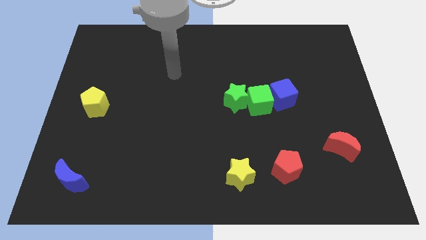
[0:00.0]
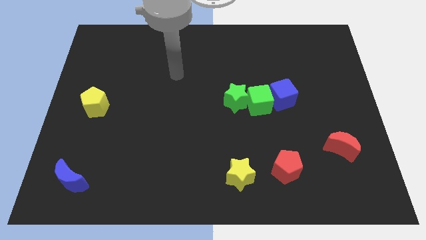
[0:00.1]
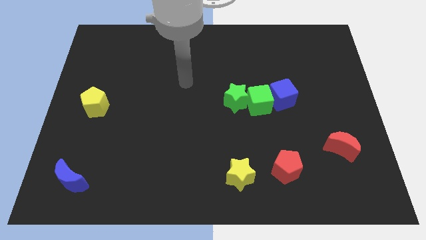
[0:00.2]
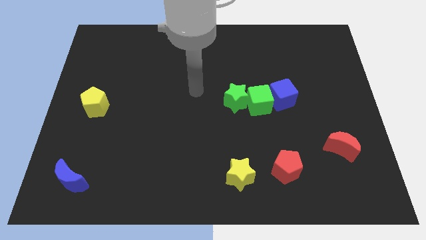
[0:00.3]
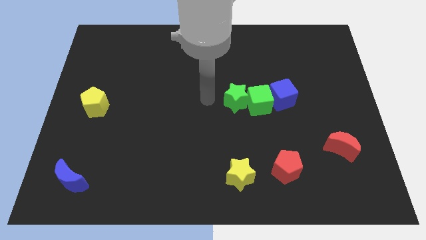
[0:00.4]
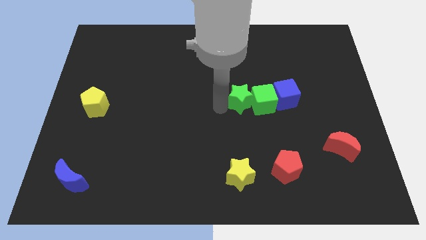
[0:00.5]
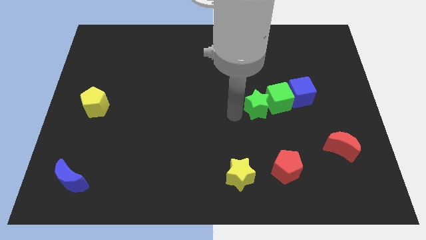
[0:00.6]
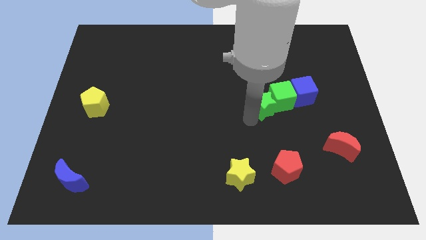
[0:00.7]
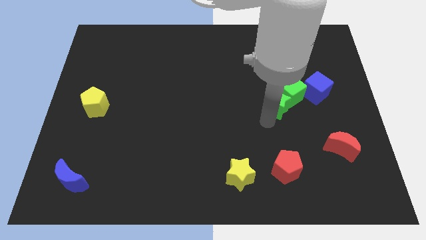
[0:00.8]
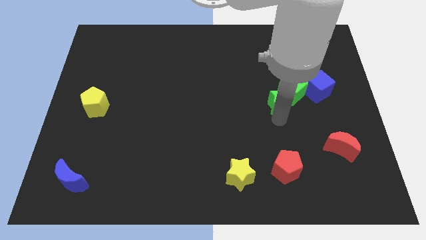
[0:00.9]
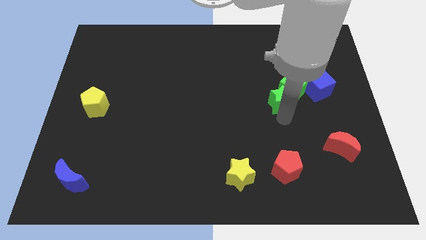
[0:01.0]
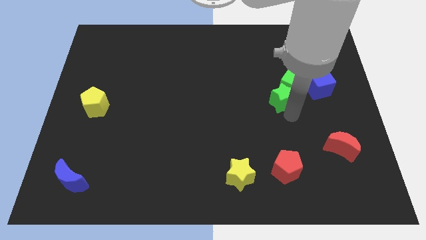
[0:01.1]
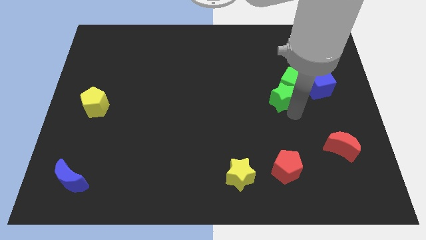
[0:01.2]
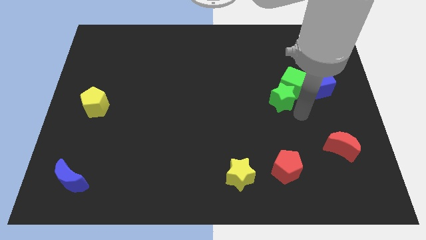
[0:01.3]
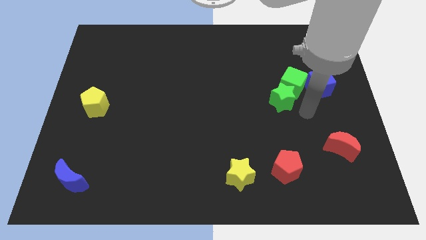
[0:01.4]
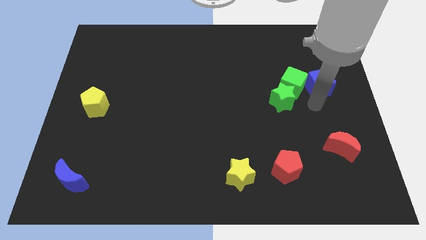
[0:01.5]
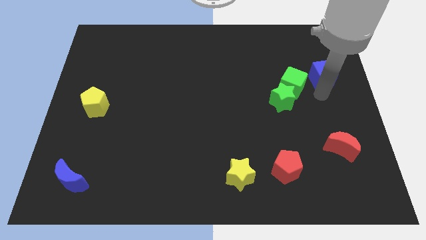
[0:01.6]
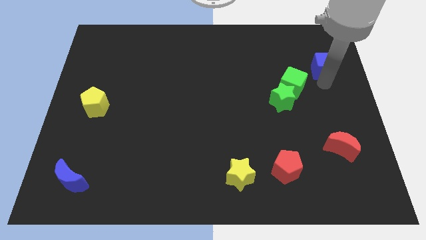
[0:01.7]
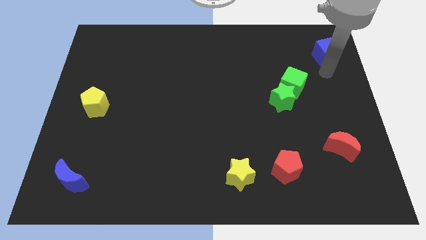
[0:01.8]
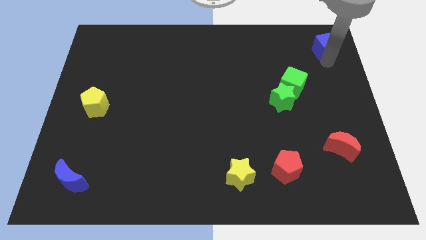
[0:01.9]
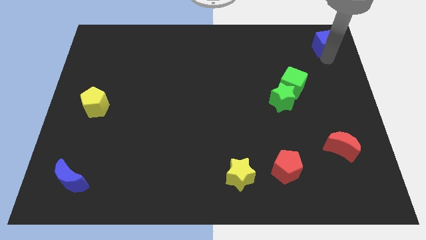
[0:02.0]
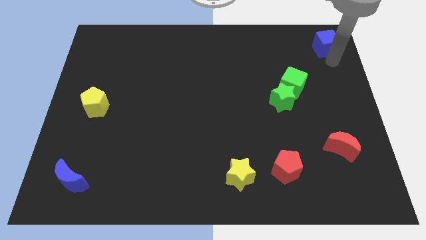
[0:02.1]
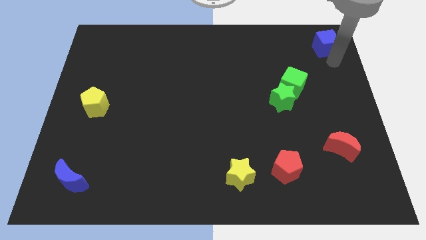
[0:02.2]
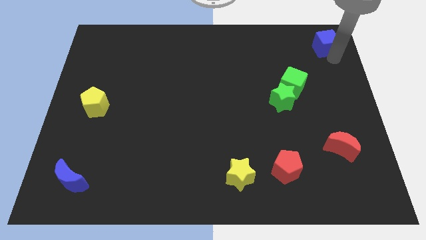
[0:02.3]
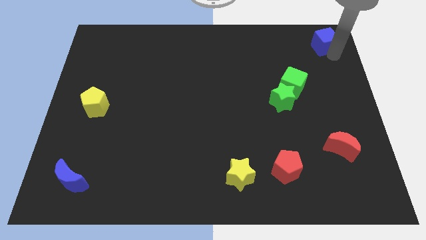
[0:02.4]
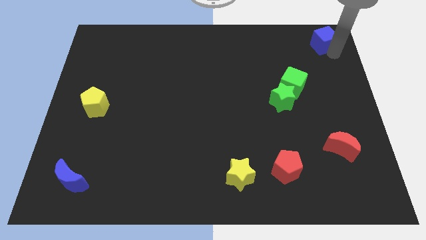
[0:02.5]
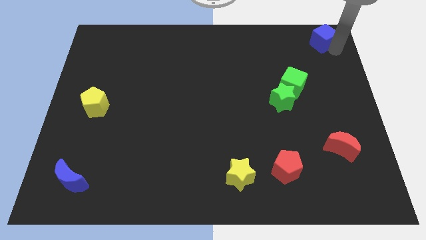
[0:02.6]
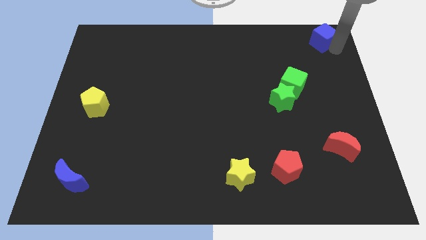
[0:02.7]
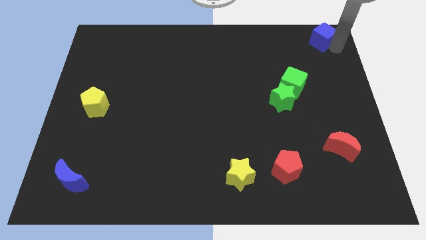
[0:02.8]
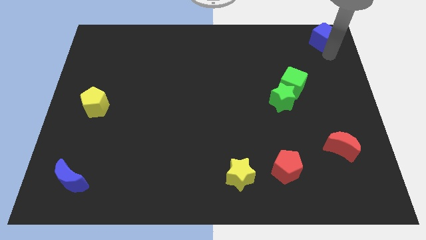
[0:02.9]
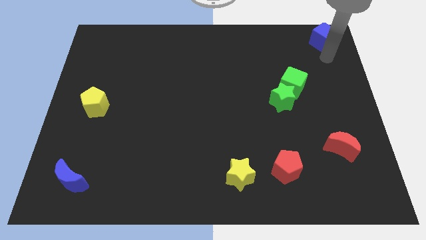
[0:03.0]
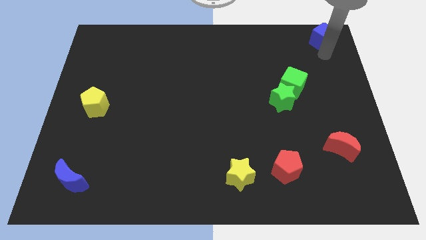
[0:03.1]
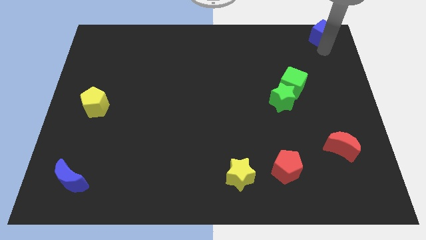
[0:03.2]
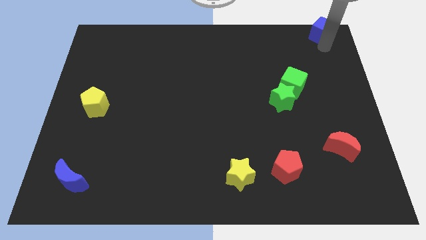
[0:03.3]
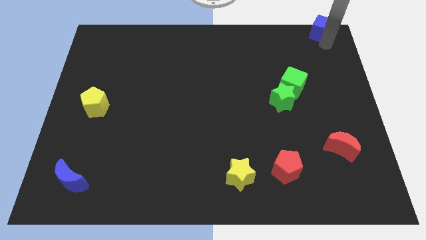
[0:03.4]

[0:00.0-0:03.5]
separate the blue square from green blocks

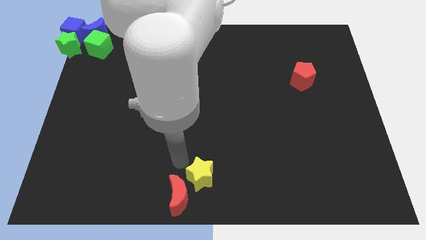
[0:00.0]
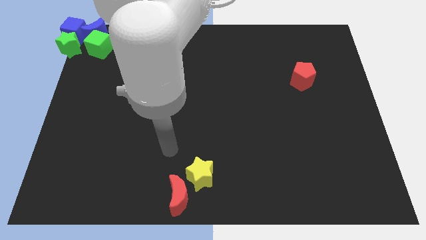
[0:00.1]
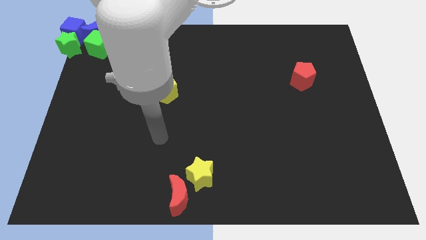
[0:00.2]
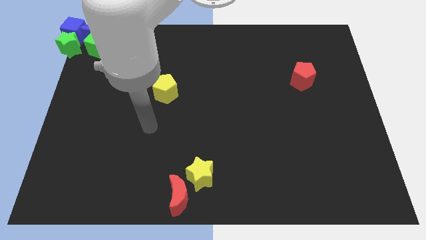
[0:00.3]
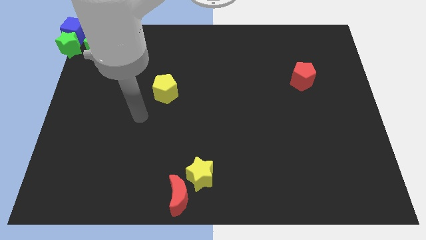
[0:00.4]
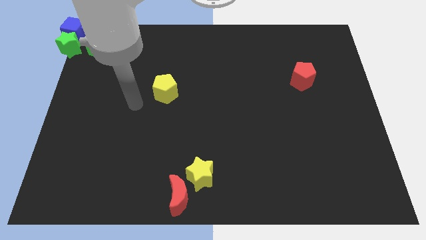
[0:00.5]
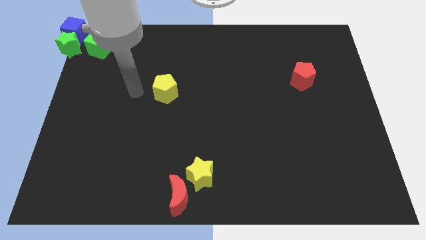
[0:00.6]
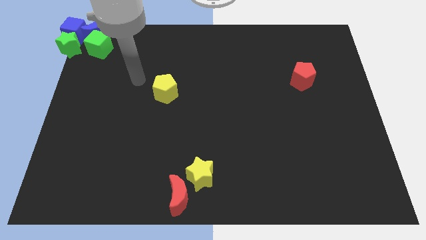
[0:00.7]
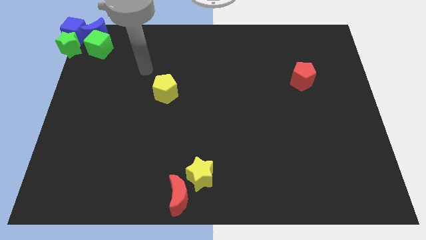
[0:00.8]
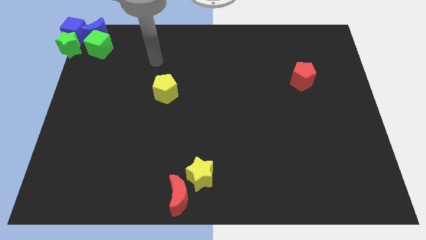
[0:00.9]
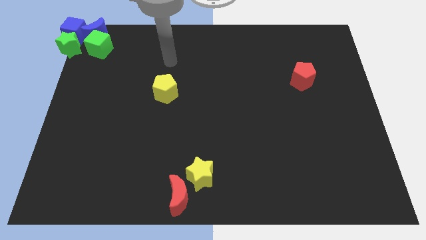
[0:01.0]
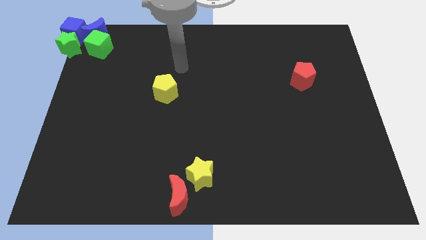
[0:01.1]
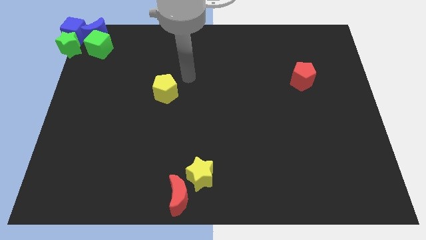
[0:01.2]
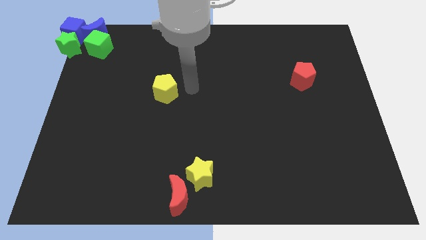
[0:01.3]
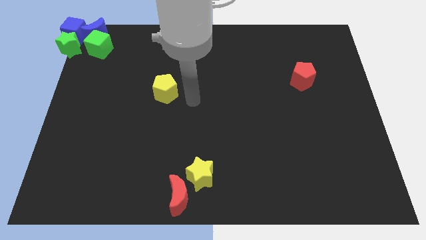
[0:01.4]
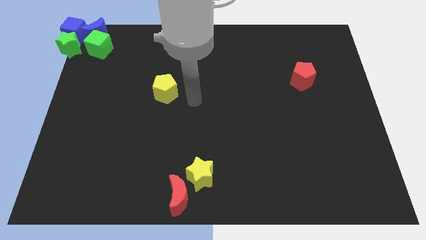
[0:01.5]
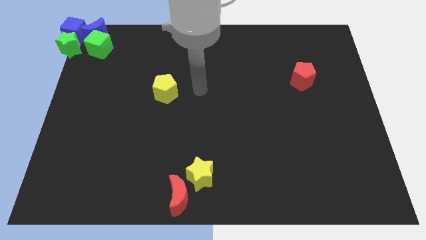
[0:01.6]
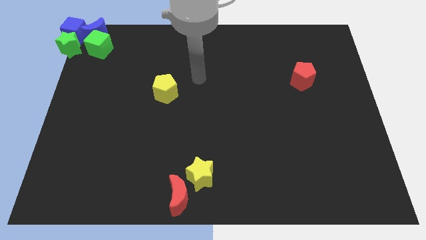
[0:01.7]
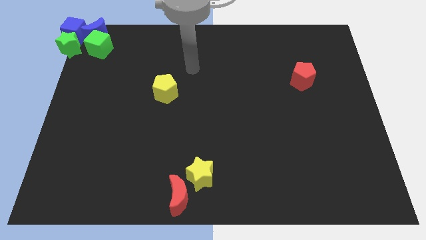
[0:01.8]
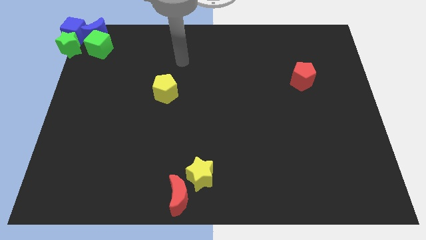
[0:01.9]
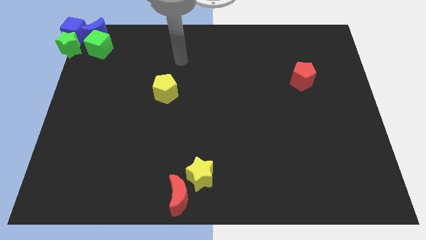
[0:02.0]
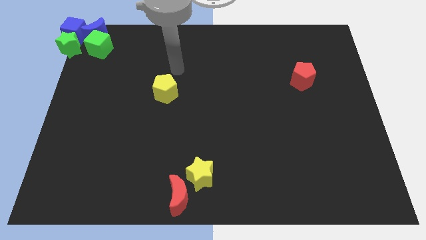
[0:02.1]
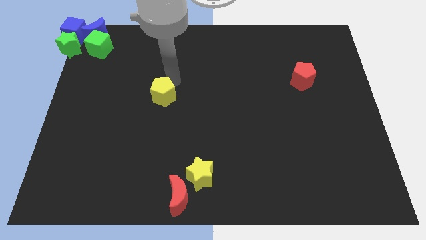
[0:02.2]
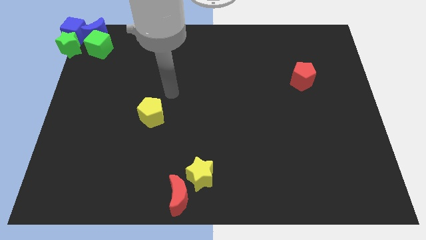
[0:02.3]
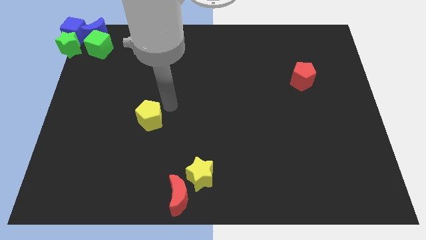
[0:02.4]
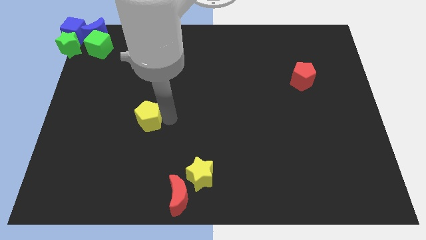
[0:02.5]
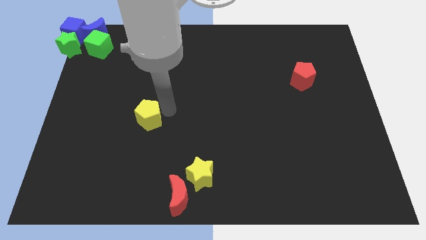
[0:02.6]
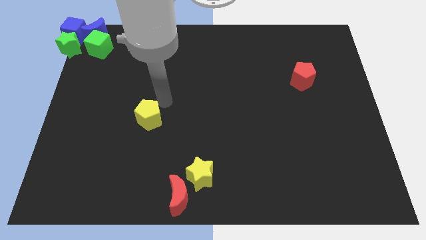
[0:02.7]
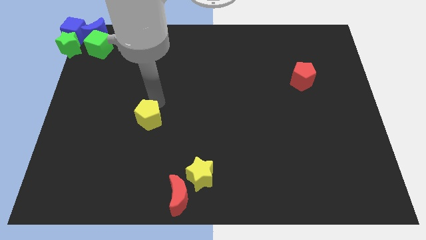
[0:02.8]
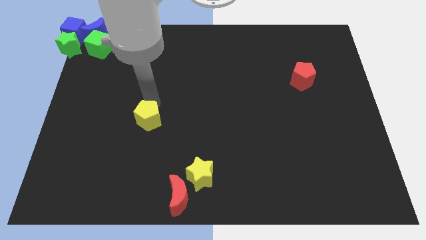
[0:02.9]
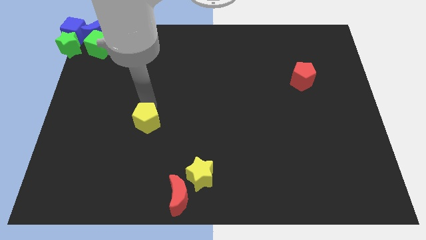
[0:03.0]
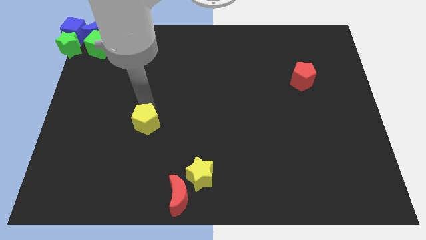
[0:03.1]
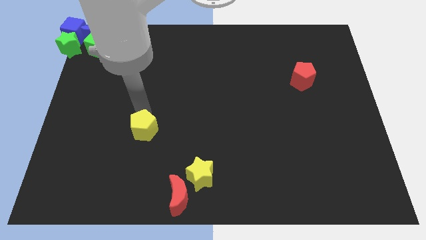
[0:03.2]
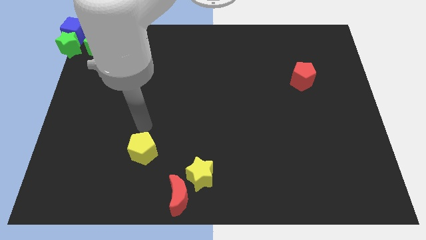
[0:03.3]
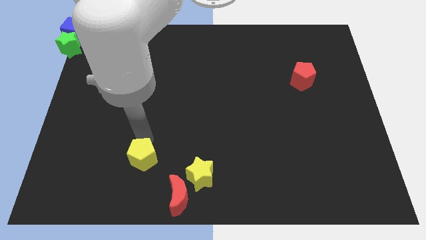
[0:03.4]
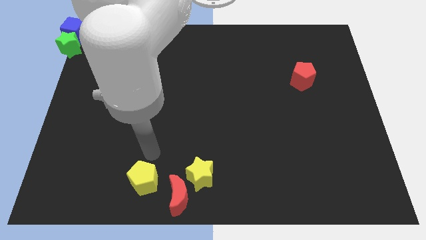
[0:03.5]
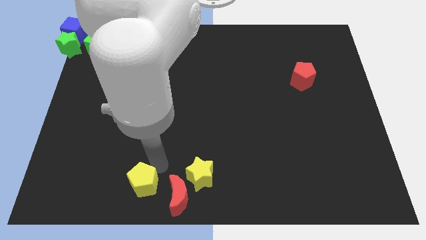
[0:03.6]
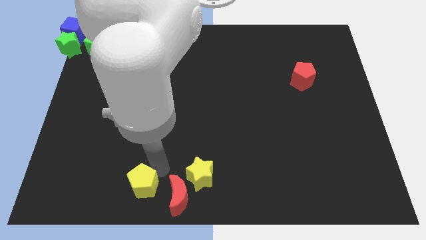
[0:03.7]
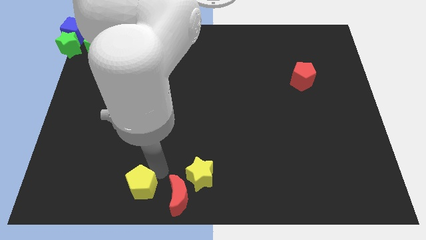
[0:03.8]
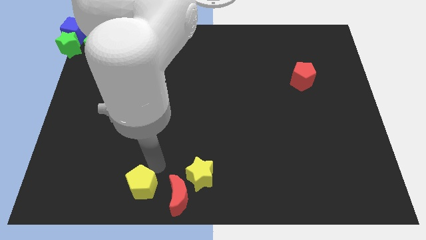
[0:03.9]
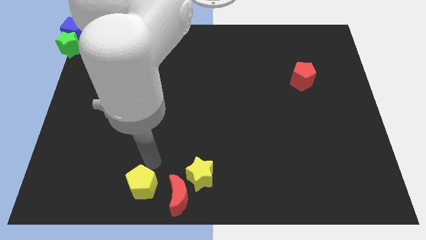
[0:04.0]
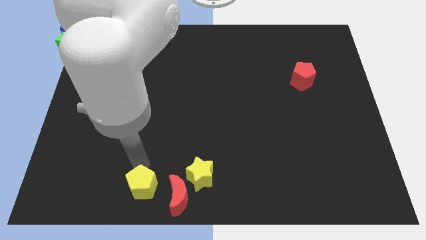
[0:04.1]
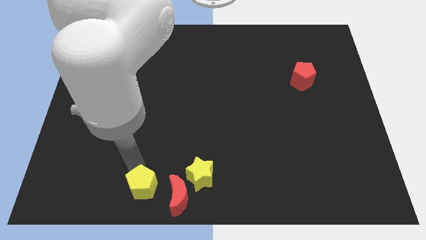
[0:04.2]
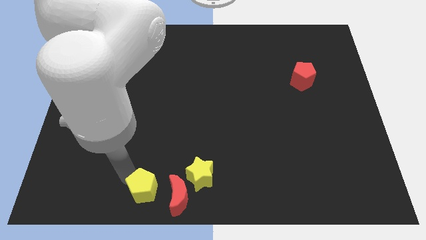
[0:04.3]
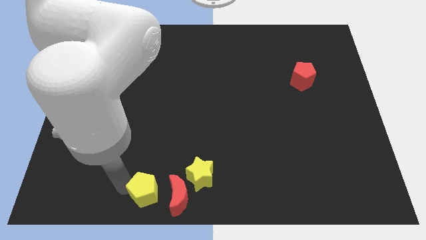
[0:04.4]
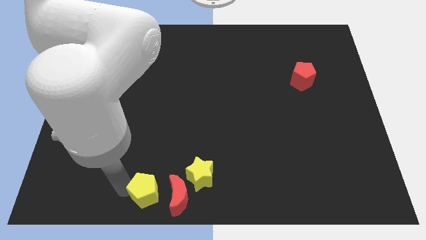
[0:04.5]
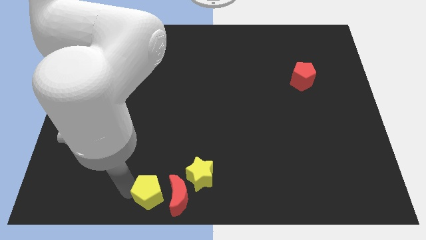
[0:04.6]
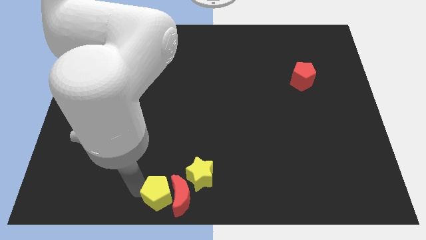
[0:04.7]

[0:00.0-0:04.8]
put the yellow pentagon to the left side of red moon

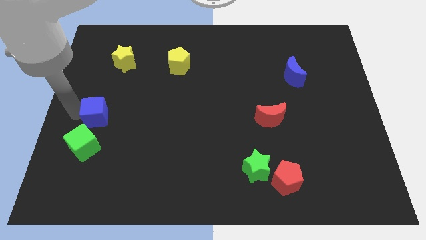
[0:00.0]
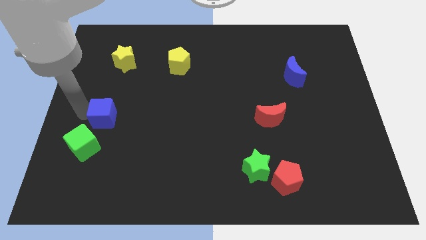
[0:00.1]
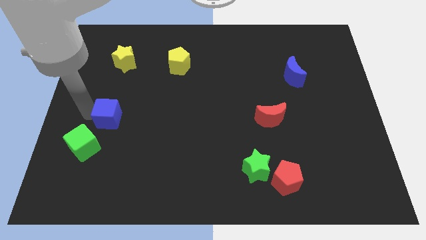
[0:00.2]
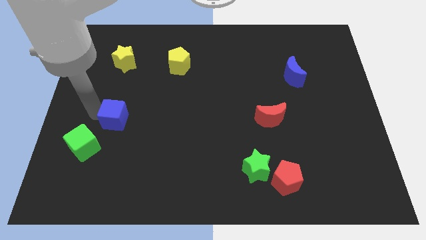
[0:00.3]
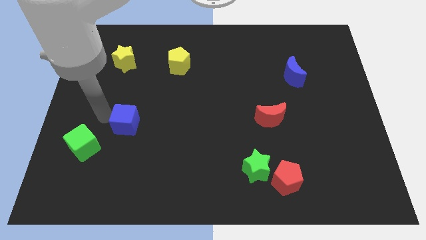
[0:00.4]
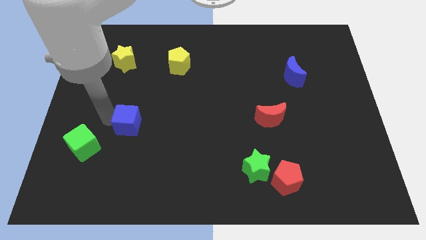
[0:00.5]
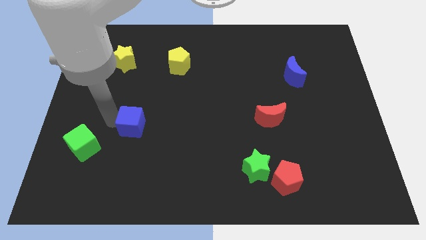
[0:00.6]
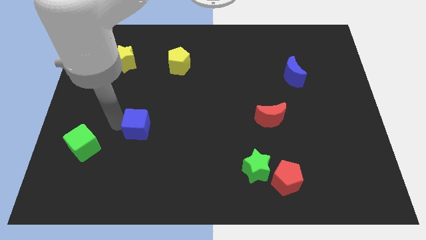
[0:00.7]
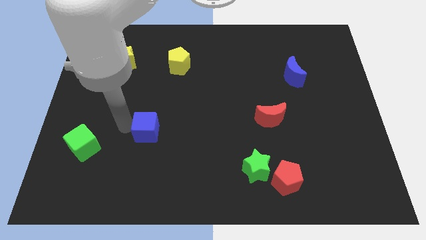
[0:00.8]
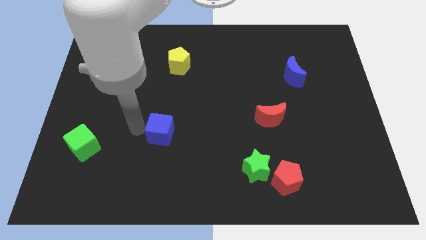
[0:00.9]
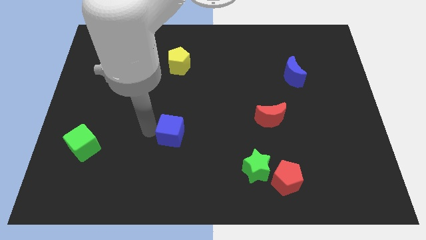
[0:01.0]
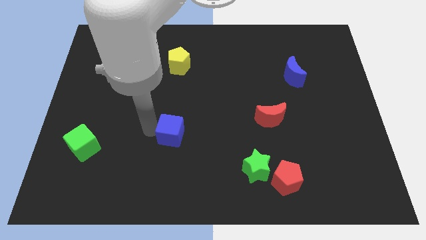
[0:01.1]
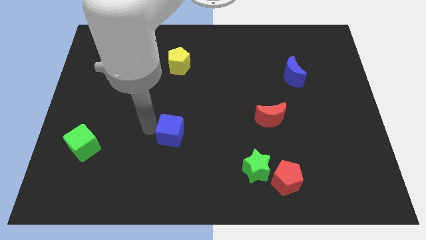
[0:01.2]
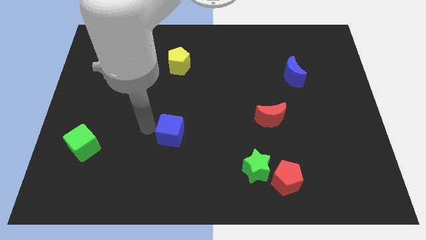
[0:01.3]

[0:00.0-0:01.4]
place the blue cube in between the red moon and green cube
